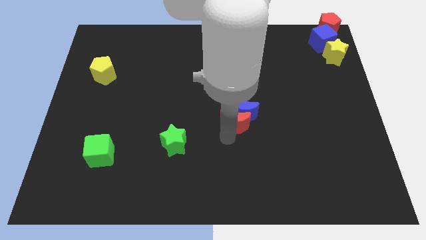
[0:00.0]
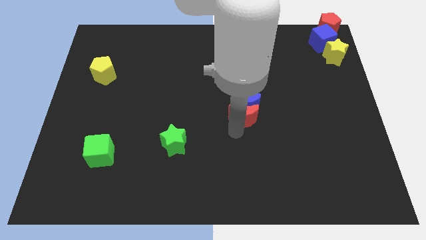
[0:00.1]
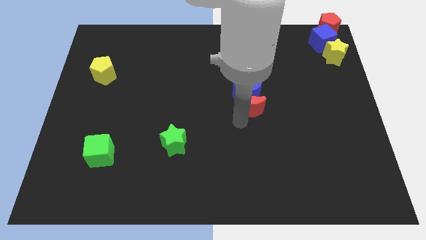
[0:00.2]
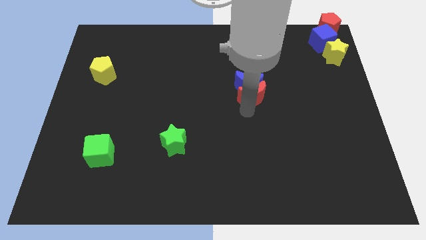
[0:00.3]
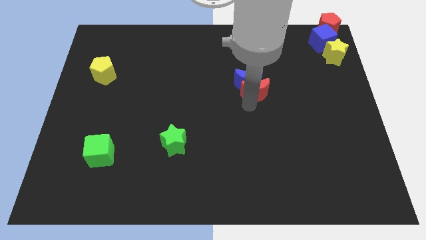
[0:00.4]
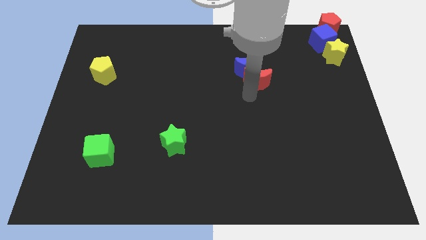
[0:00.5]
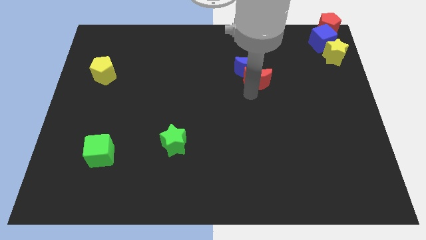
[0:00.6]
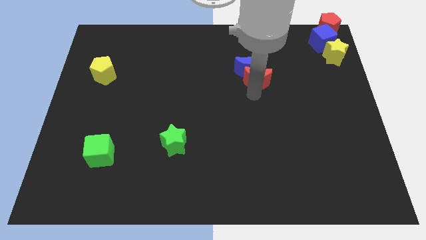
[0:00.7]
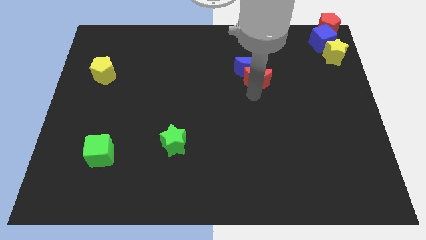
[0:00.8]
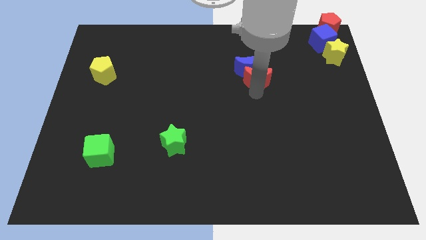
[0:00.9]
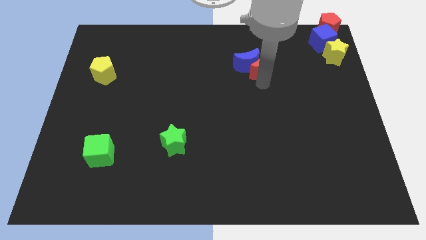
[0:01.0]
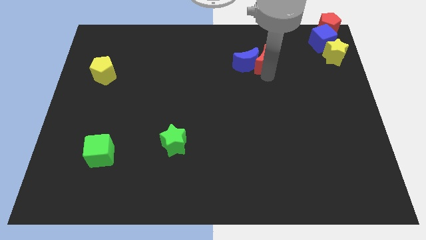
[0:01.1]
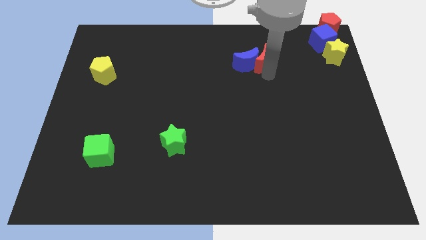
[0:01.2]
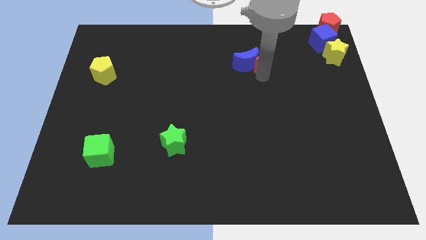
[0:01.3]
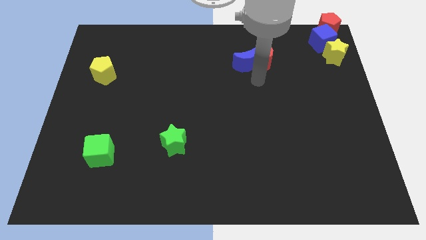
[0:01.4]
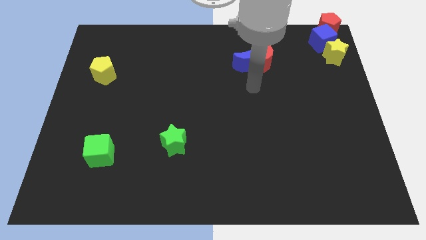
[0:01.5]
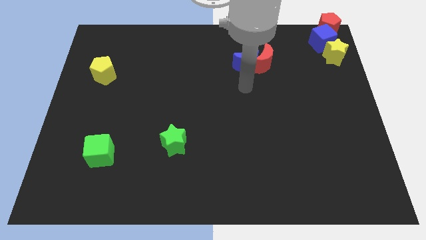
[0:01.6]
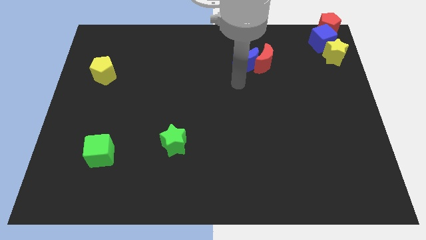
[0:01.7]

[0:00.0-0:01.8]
push the red crescent along with blue crescent to the left of the yellow star

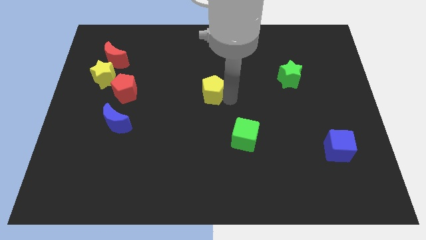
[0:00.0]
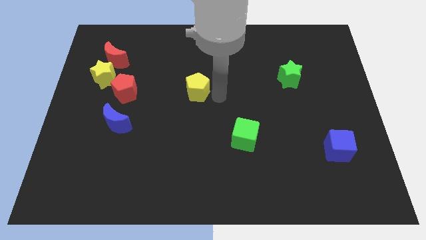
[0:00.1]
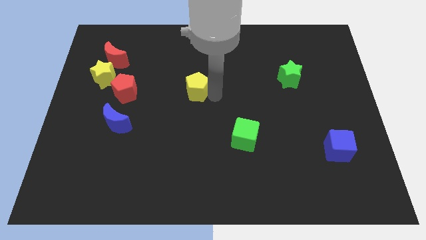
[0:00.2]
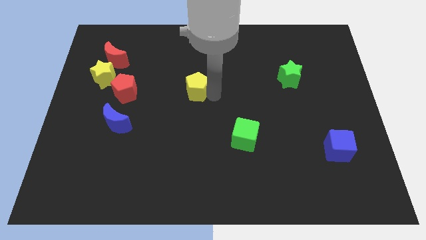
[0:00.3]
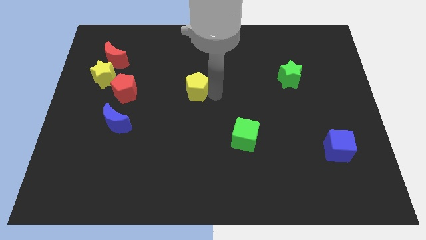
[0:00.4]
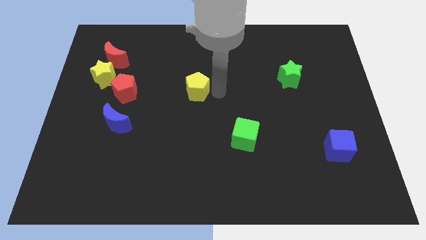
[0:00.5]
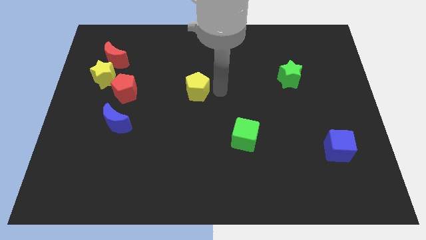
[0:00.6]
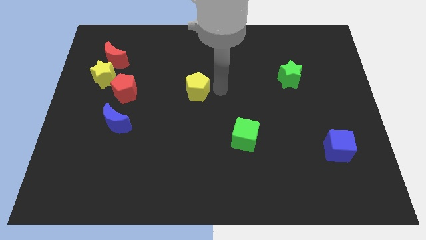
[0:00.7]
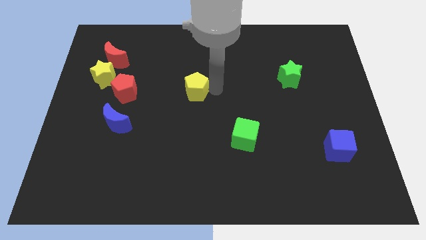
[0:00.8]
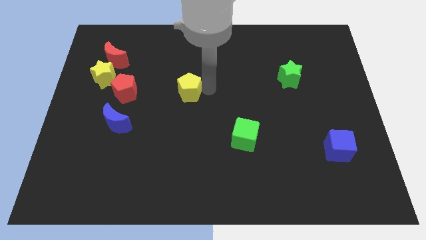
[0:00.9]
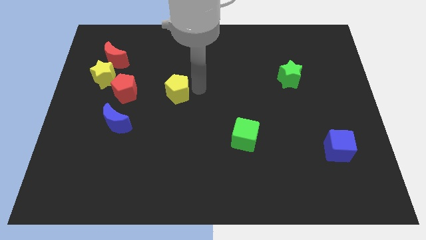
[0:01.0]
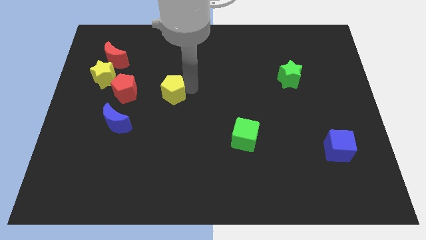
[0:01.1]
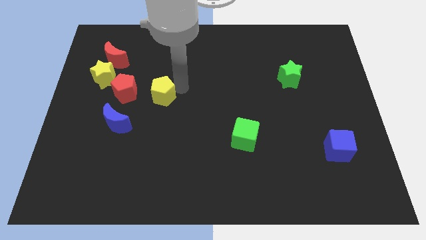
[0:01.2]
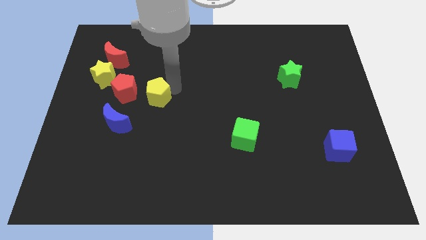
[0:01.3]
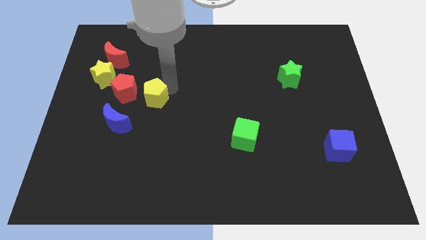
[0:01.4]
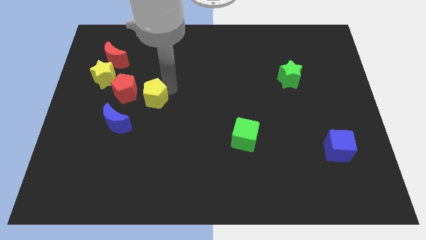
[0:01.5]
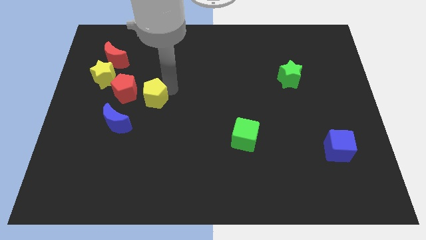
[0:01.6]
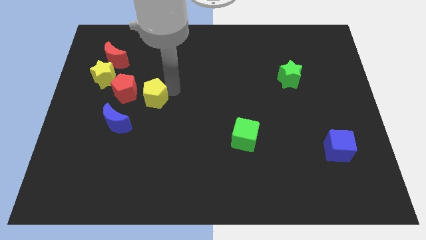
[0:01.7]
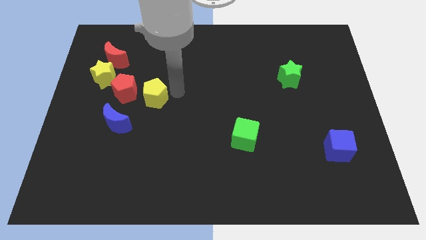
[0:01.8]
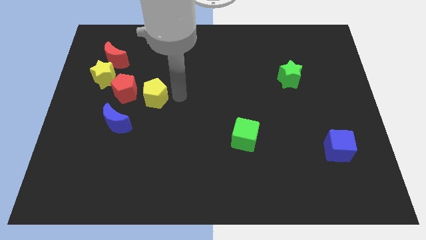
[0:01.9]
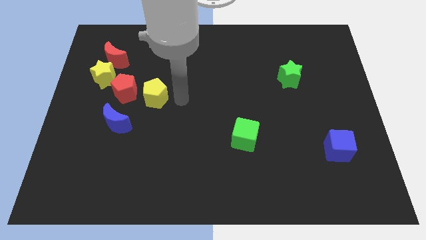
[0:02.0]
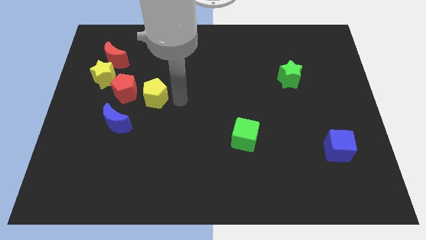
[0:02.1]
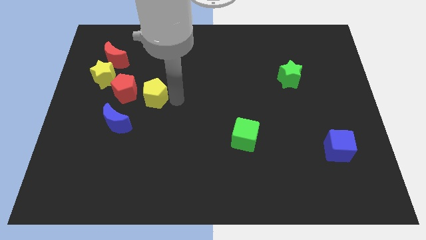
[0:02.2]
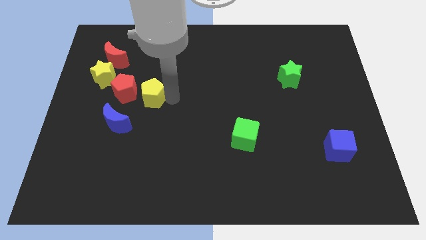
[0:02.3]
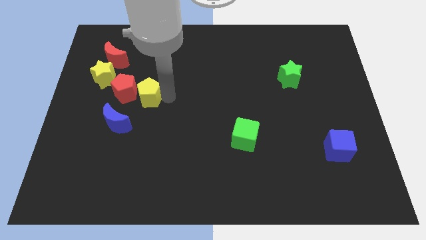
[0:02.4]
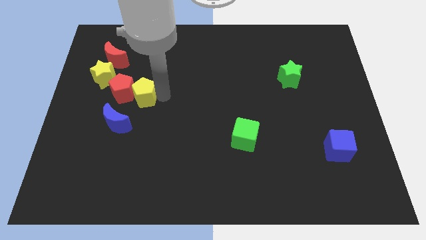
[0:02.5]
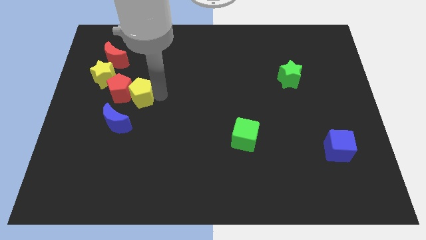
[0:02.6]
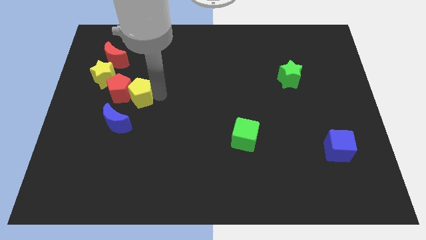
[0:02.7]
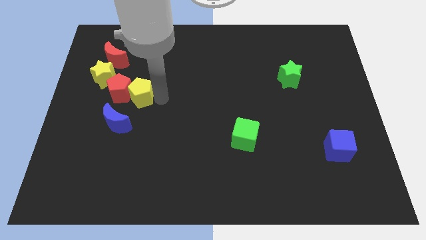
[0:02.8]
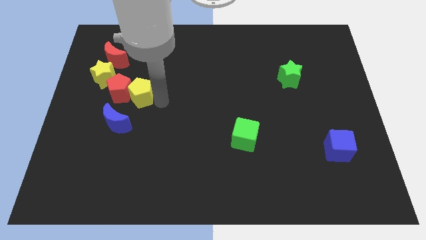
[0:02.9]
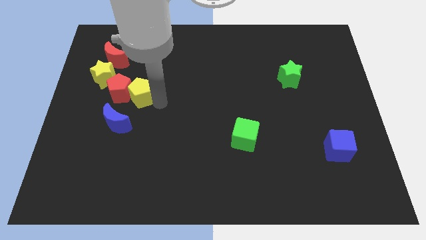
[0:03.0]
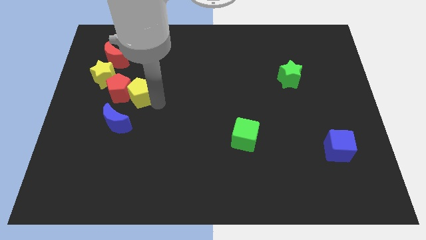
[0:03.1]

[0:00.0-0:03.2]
move the yellow pentagon into the red pentagon

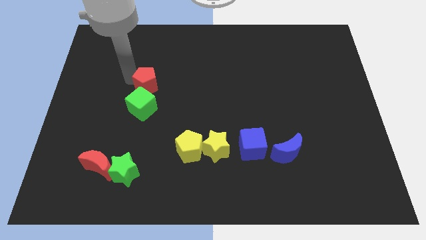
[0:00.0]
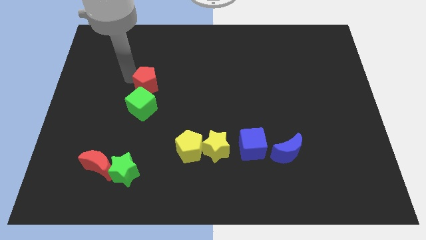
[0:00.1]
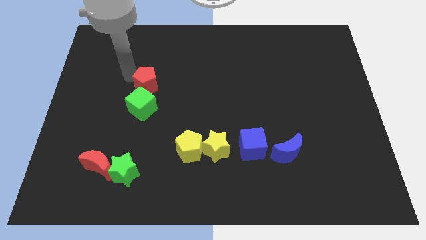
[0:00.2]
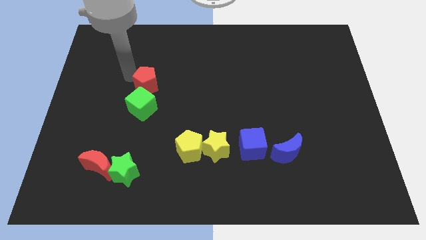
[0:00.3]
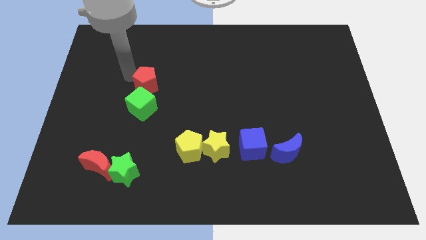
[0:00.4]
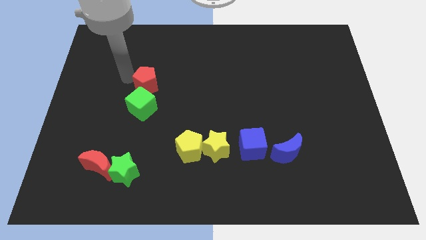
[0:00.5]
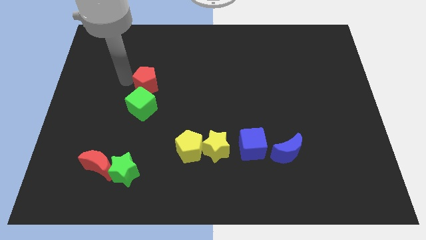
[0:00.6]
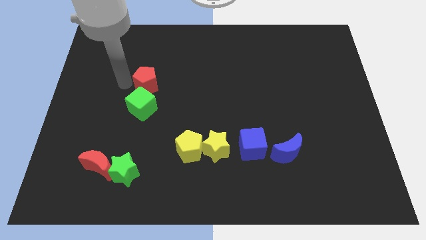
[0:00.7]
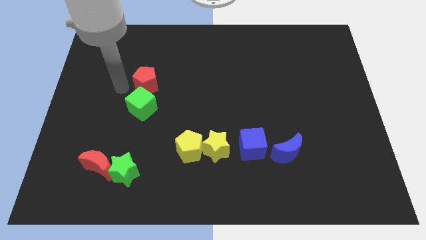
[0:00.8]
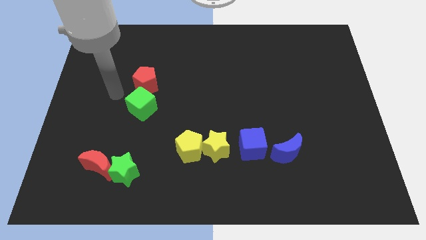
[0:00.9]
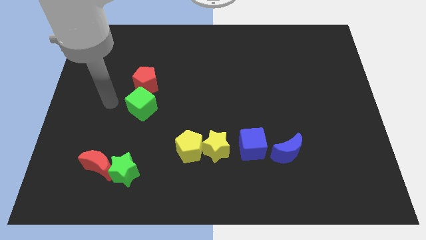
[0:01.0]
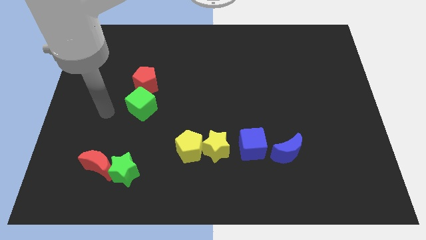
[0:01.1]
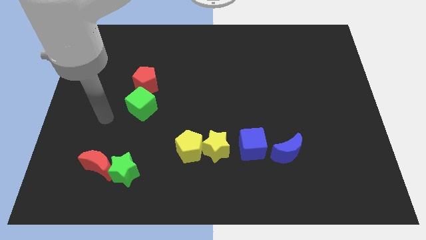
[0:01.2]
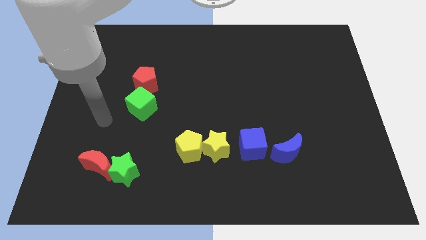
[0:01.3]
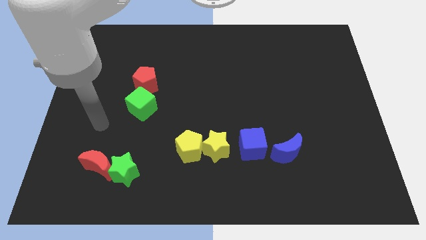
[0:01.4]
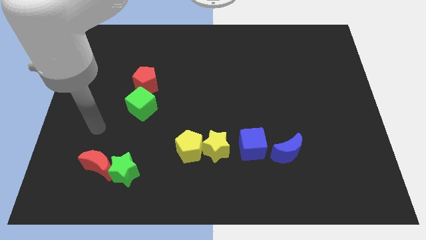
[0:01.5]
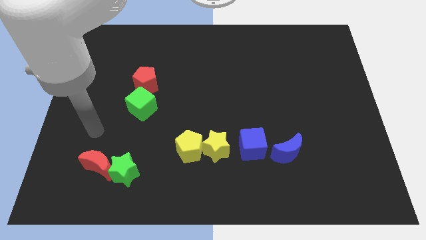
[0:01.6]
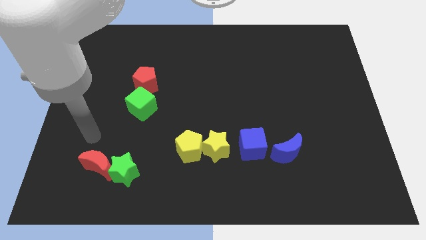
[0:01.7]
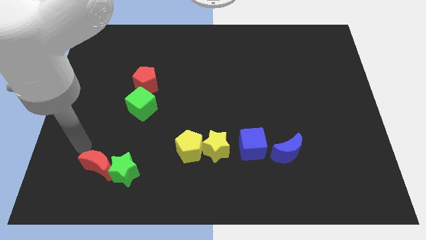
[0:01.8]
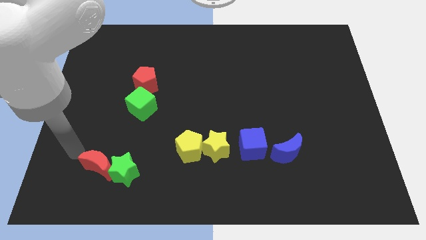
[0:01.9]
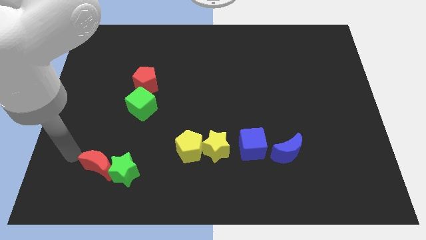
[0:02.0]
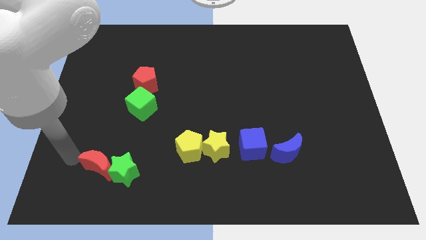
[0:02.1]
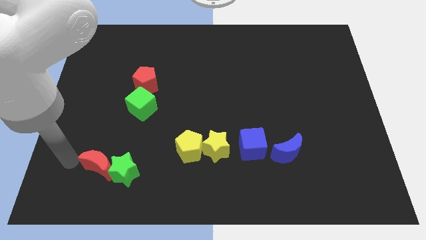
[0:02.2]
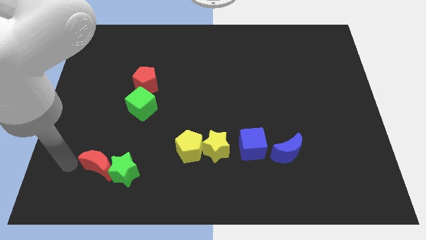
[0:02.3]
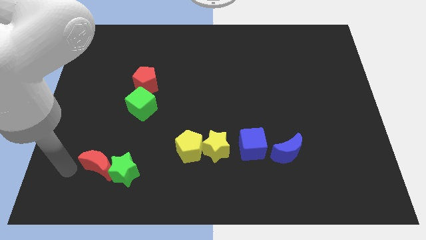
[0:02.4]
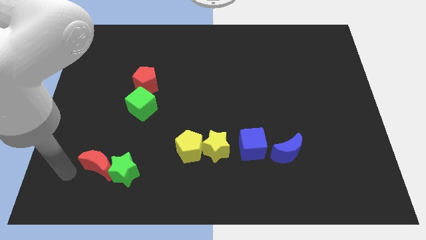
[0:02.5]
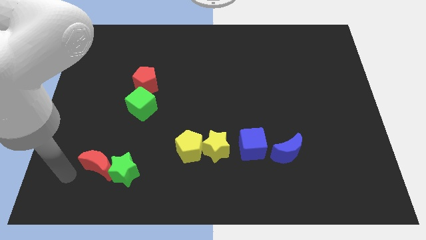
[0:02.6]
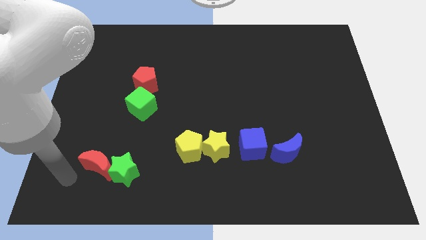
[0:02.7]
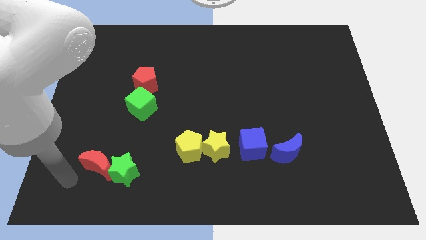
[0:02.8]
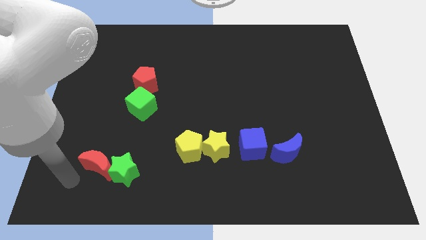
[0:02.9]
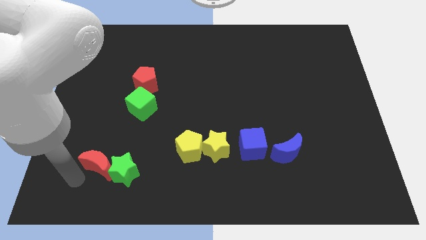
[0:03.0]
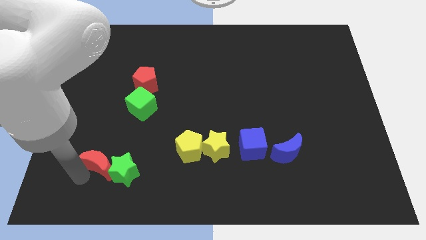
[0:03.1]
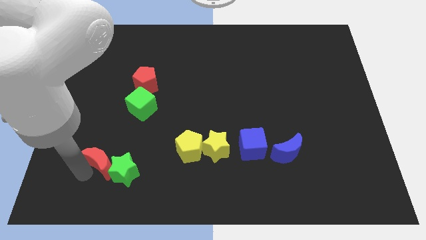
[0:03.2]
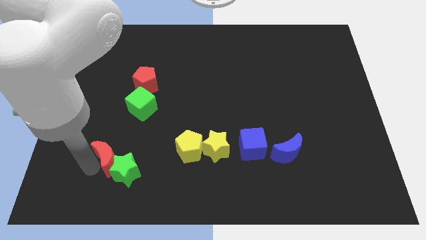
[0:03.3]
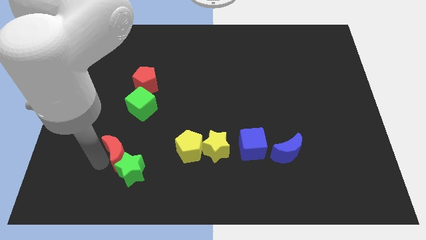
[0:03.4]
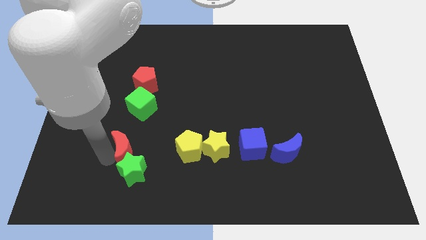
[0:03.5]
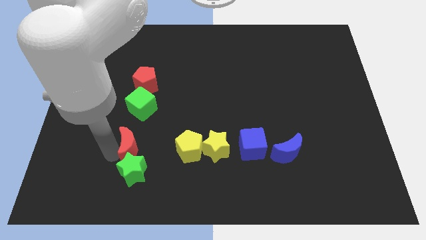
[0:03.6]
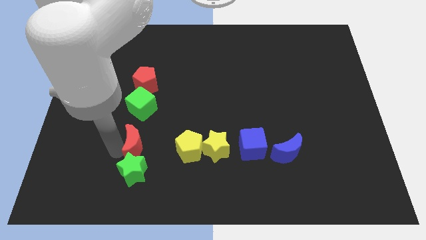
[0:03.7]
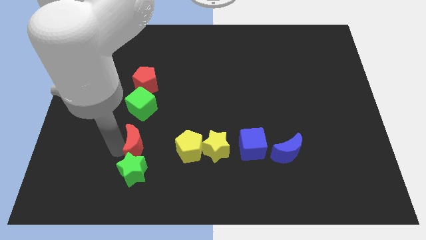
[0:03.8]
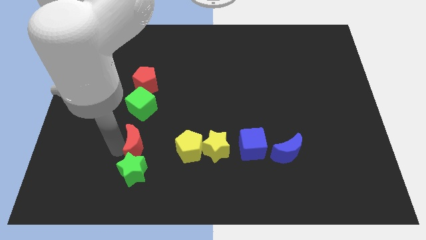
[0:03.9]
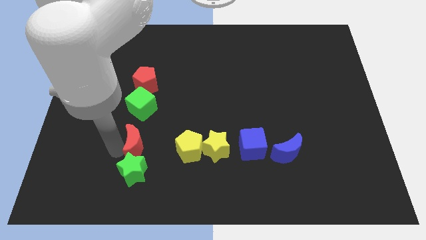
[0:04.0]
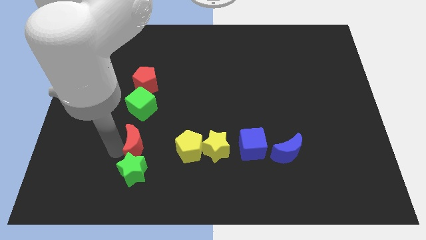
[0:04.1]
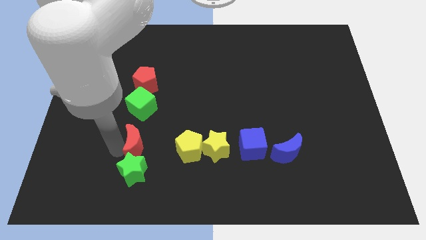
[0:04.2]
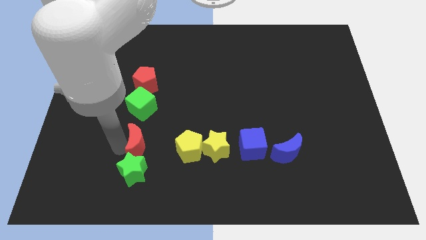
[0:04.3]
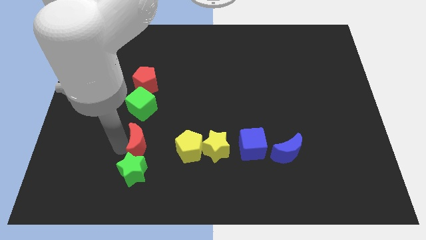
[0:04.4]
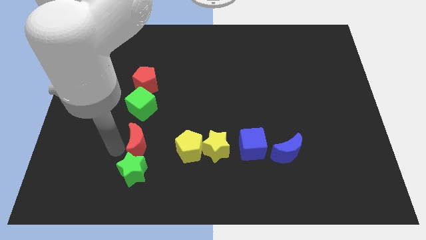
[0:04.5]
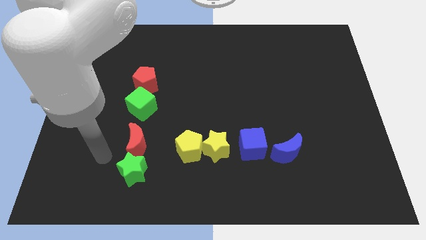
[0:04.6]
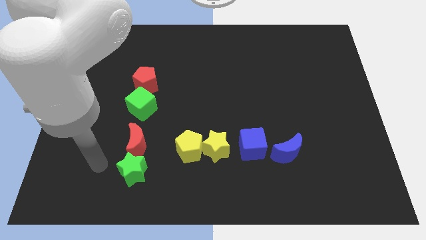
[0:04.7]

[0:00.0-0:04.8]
place the red crescent in between the green star and cube
